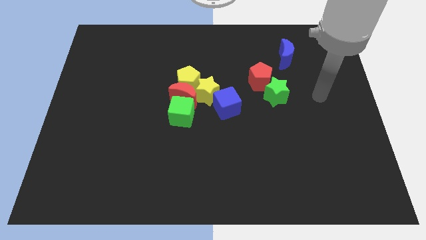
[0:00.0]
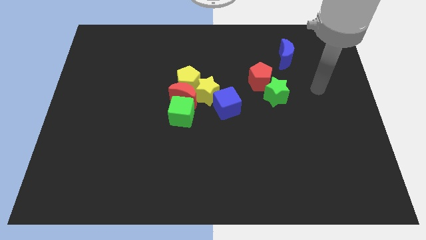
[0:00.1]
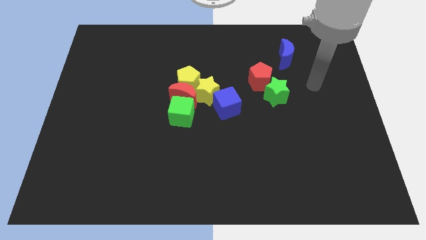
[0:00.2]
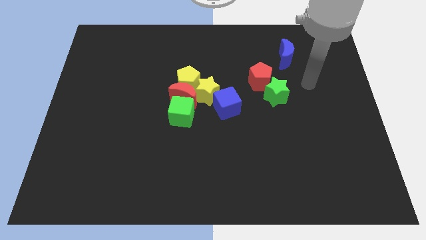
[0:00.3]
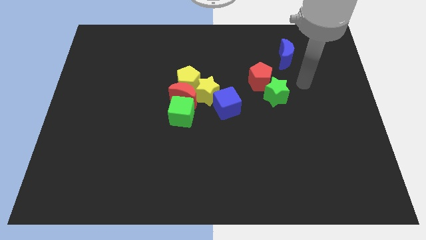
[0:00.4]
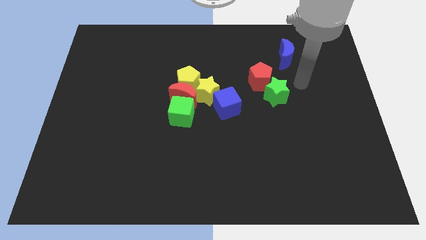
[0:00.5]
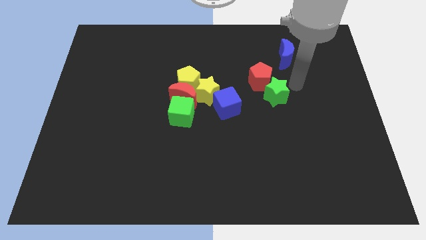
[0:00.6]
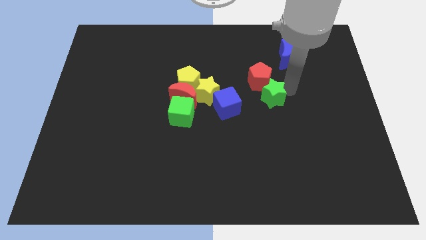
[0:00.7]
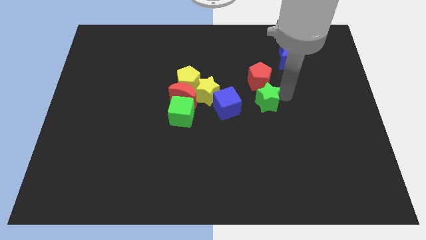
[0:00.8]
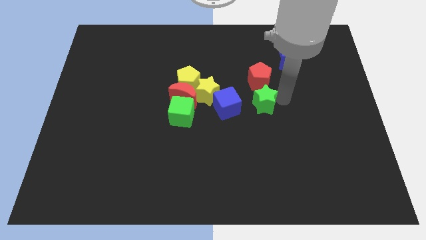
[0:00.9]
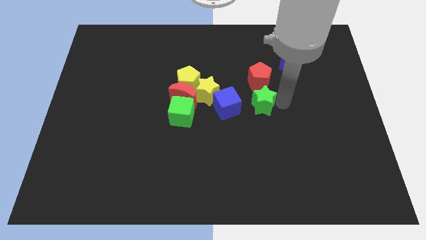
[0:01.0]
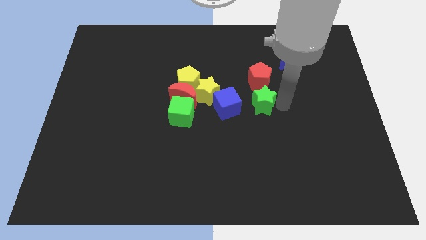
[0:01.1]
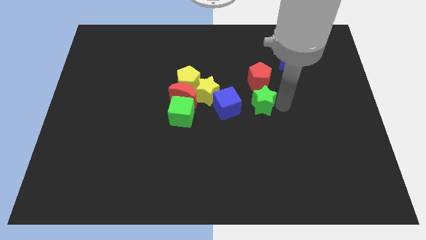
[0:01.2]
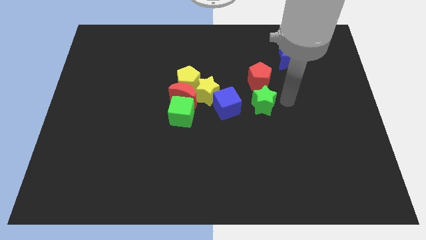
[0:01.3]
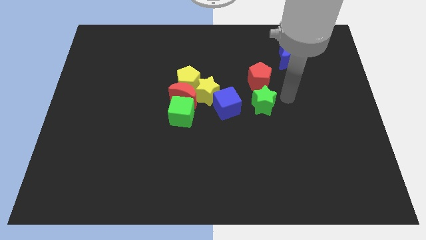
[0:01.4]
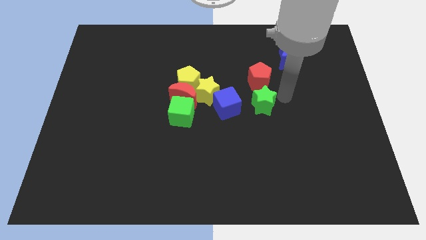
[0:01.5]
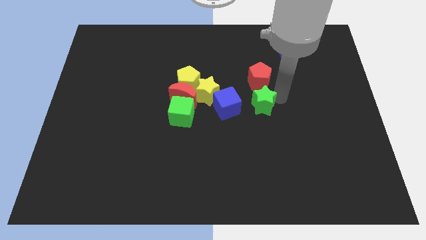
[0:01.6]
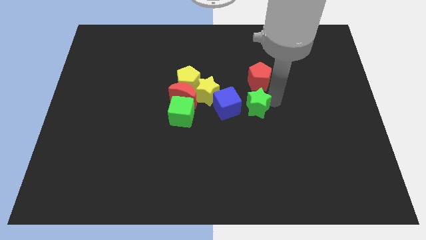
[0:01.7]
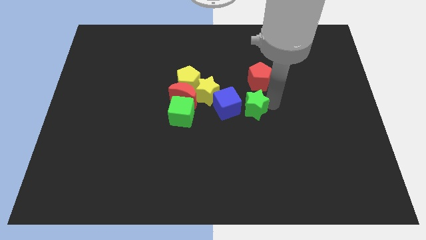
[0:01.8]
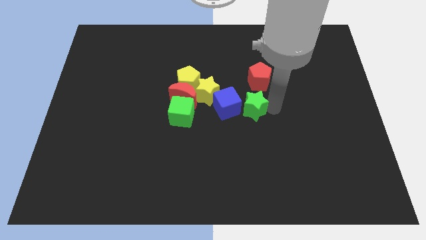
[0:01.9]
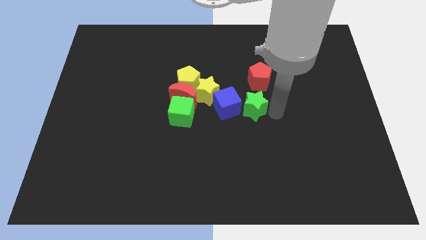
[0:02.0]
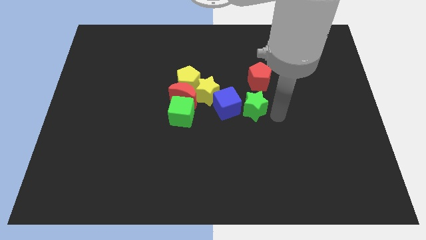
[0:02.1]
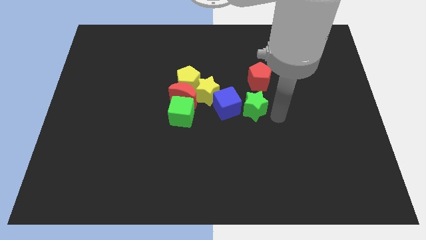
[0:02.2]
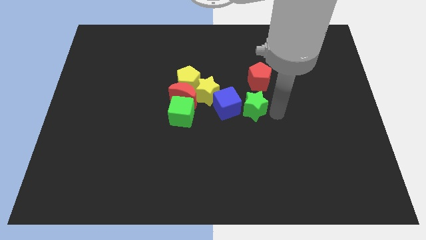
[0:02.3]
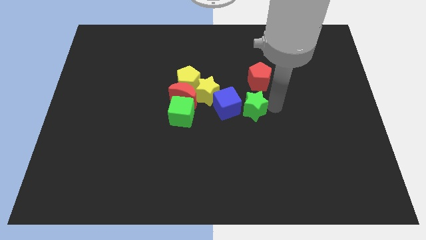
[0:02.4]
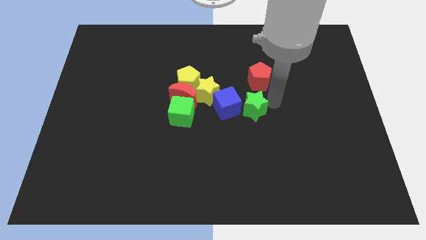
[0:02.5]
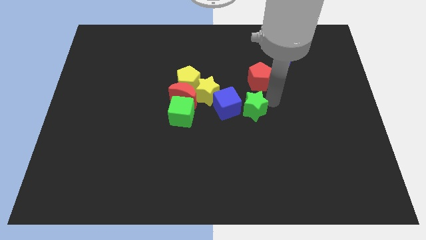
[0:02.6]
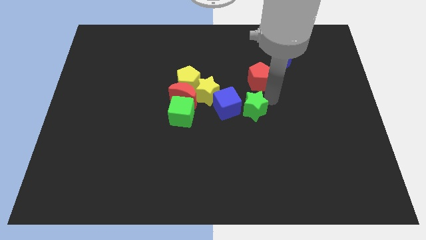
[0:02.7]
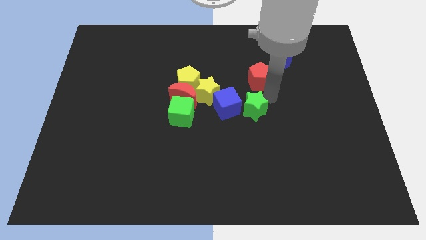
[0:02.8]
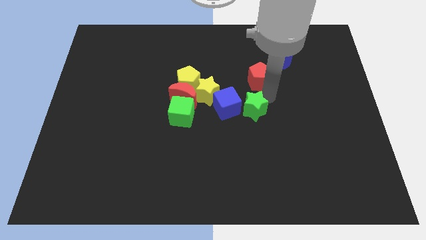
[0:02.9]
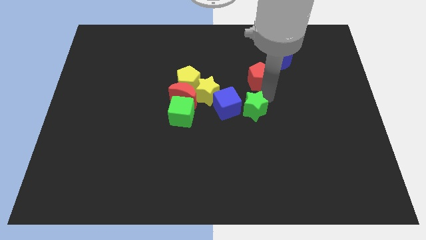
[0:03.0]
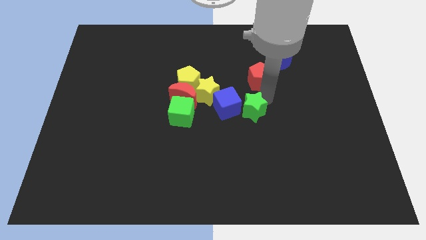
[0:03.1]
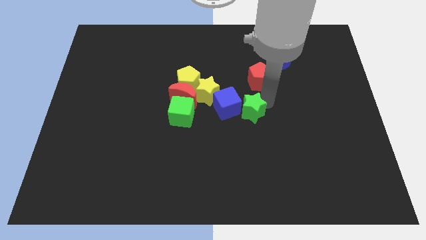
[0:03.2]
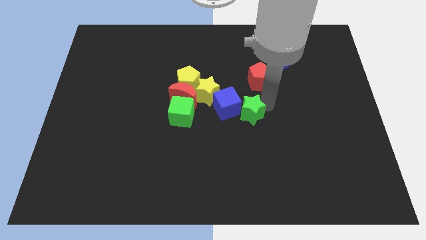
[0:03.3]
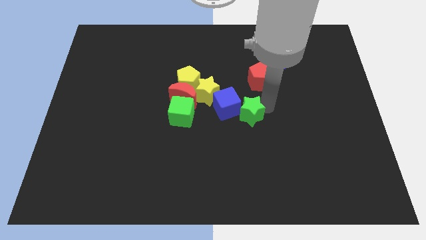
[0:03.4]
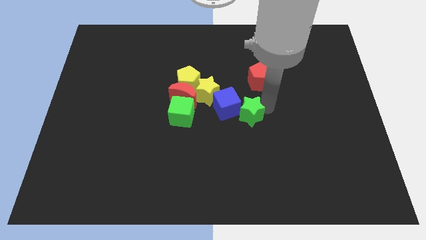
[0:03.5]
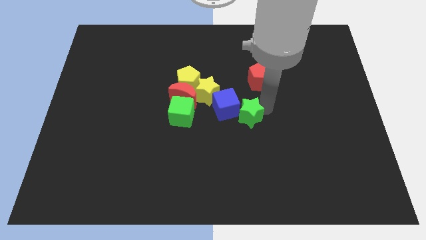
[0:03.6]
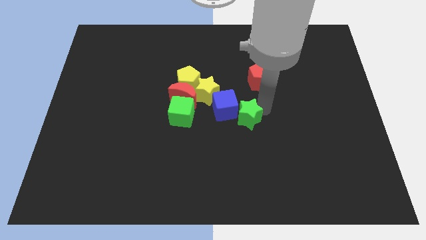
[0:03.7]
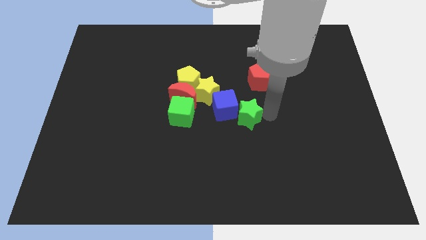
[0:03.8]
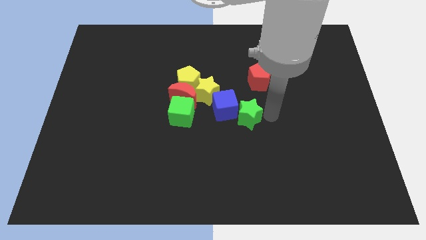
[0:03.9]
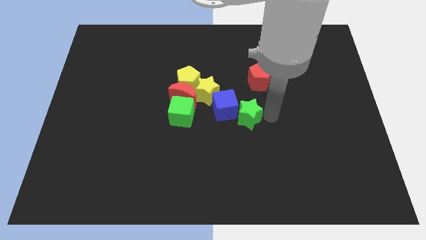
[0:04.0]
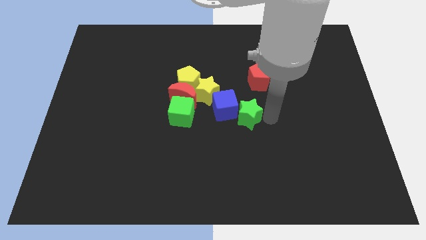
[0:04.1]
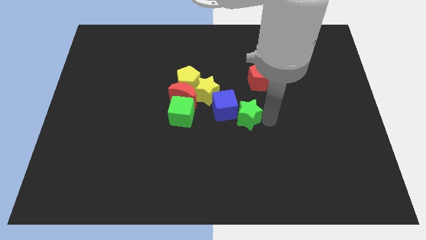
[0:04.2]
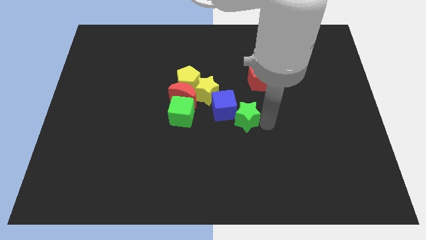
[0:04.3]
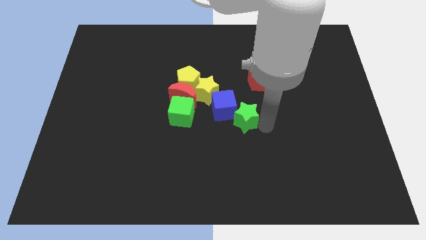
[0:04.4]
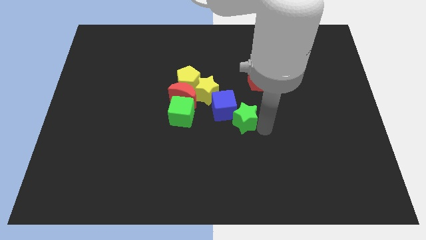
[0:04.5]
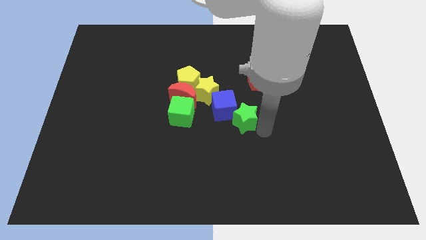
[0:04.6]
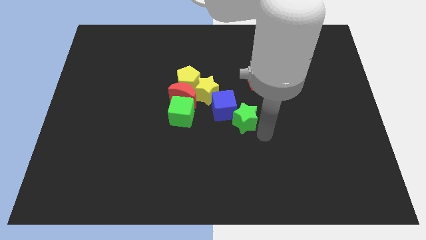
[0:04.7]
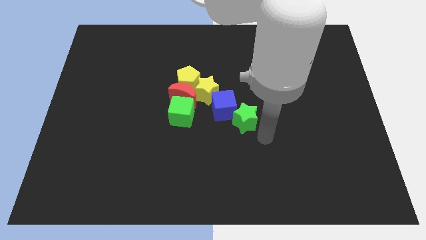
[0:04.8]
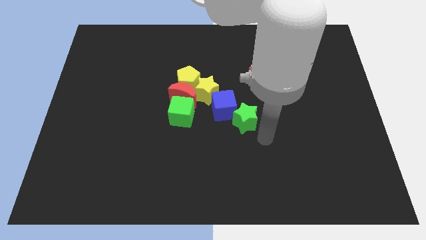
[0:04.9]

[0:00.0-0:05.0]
move the green star below to the blue cube

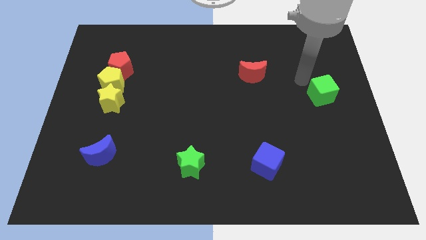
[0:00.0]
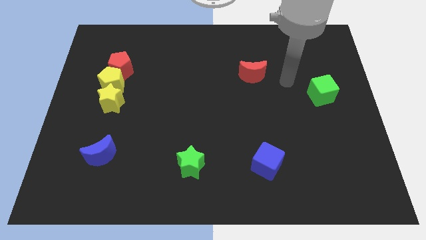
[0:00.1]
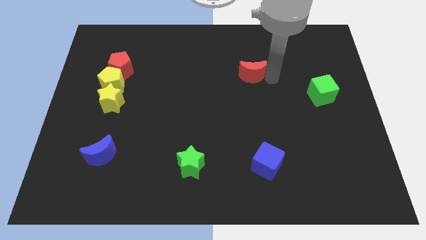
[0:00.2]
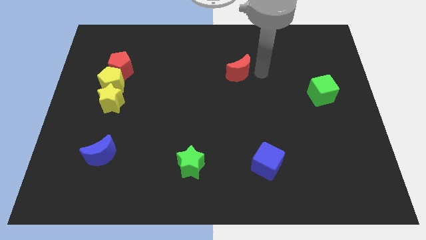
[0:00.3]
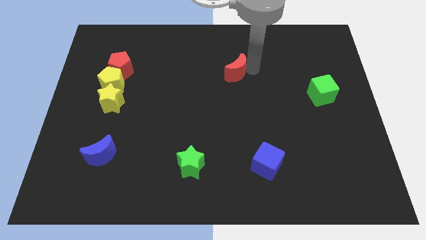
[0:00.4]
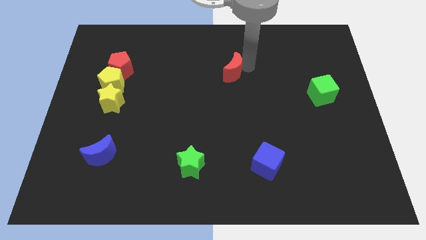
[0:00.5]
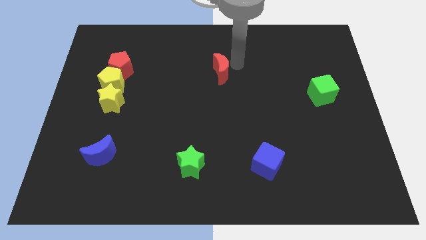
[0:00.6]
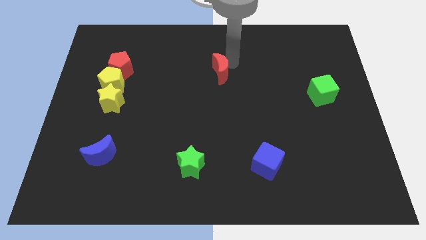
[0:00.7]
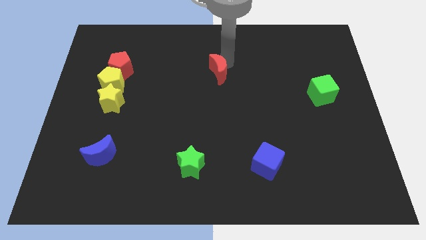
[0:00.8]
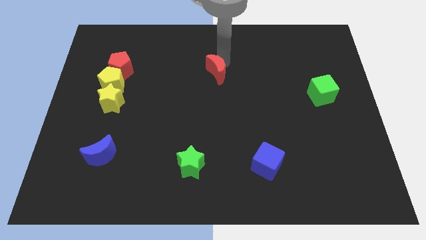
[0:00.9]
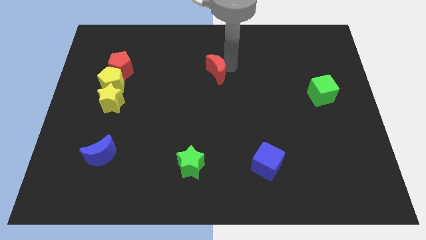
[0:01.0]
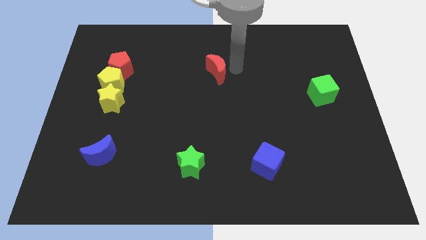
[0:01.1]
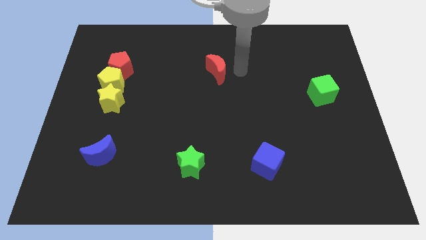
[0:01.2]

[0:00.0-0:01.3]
move the red crescent to the left side of the board

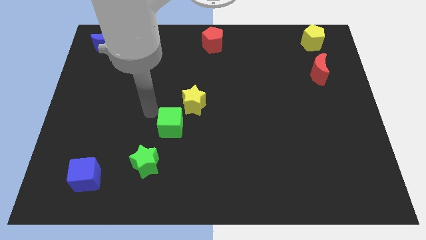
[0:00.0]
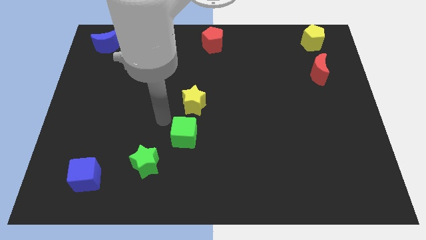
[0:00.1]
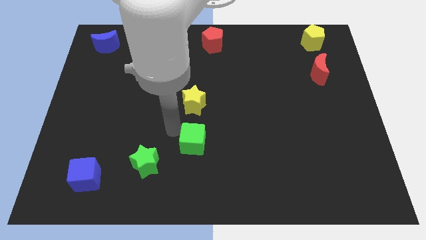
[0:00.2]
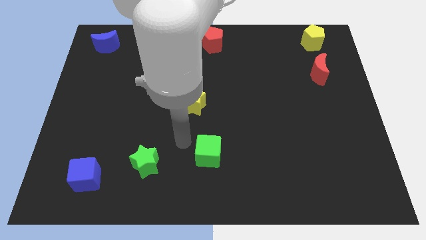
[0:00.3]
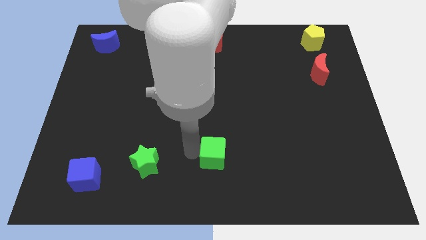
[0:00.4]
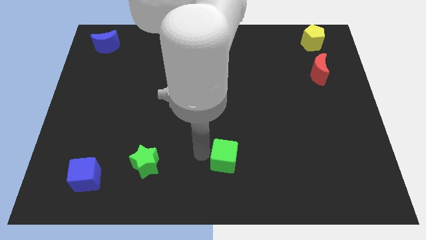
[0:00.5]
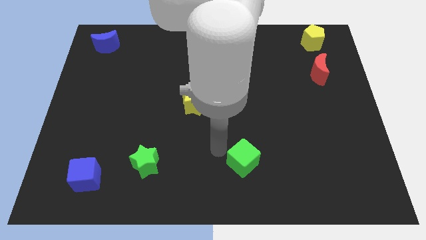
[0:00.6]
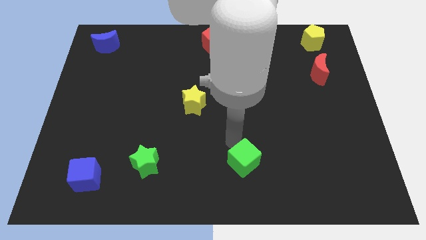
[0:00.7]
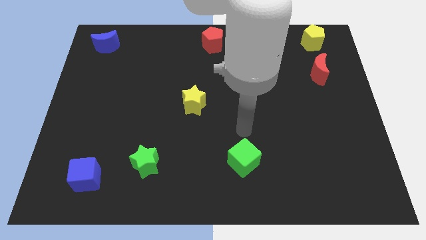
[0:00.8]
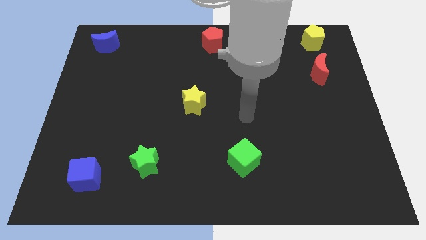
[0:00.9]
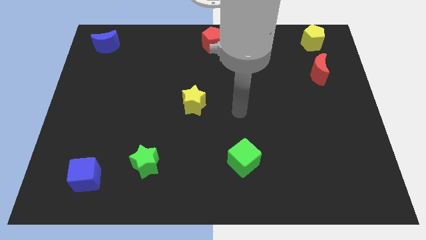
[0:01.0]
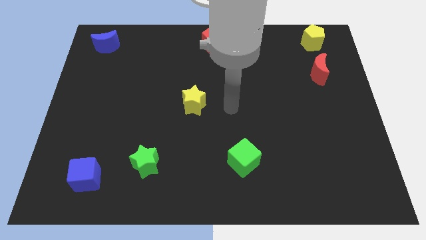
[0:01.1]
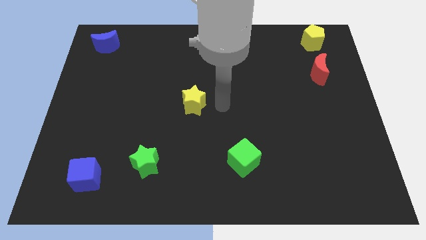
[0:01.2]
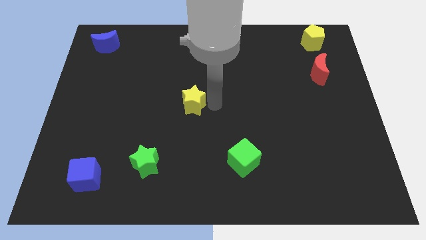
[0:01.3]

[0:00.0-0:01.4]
move the green cube to the left of the board

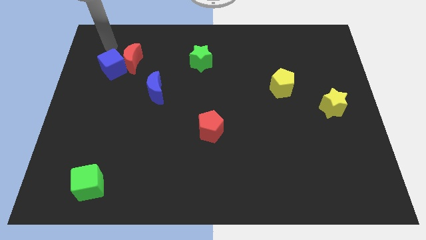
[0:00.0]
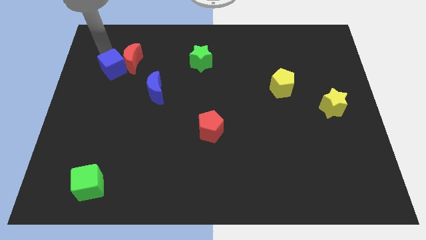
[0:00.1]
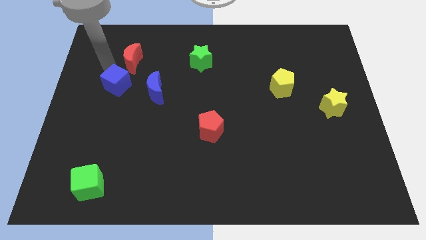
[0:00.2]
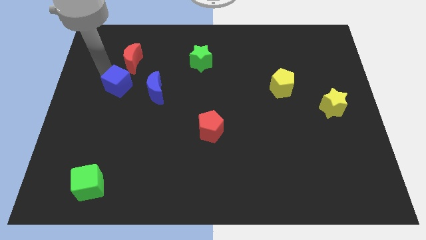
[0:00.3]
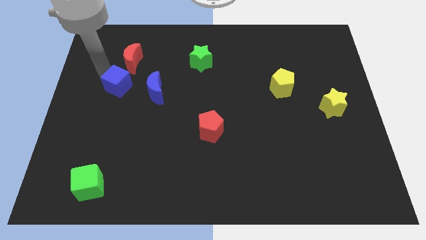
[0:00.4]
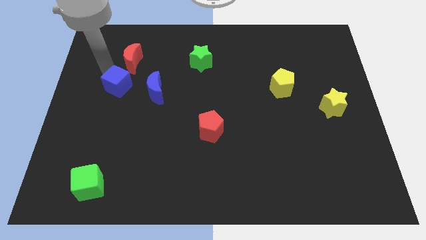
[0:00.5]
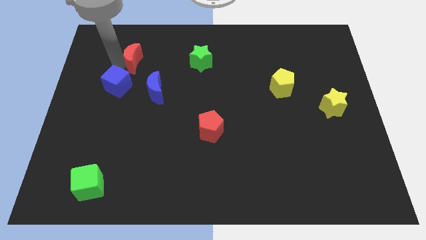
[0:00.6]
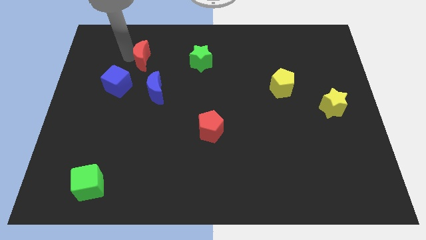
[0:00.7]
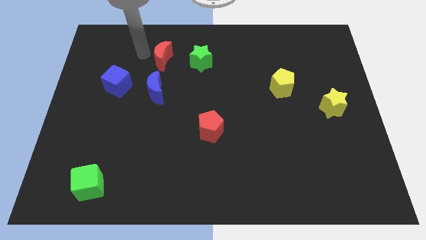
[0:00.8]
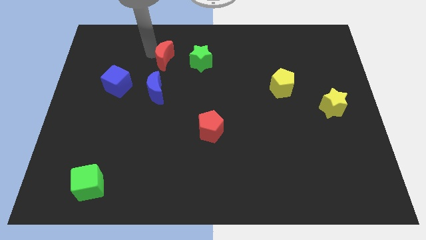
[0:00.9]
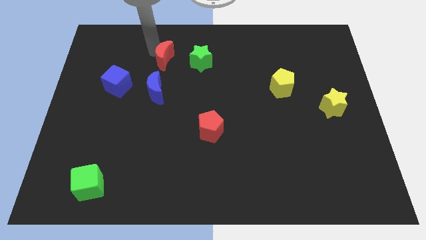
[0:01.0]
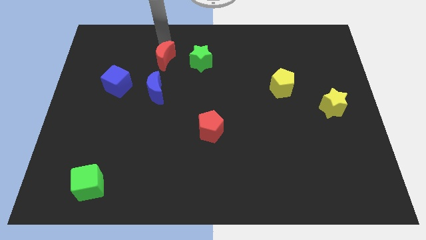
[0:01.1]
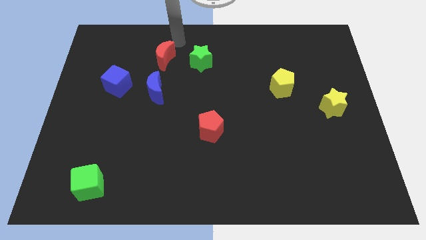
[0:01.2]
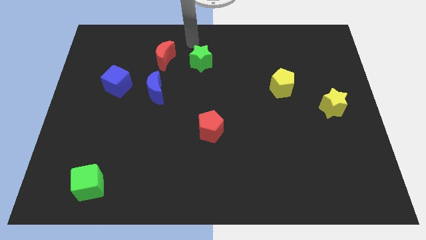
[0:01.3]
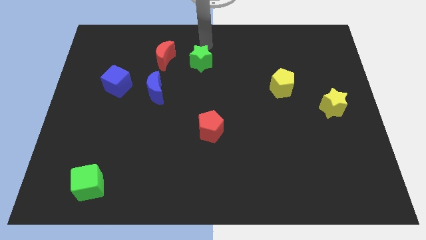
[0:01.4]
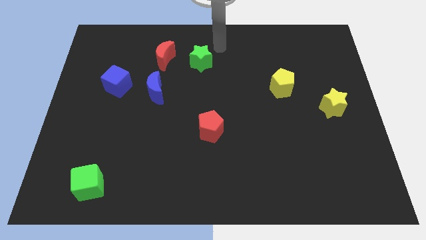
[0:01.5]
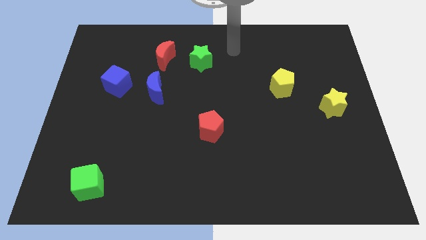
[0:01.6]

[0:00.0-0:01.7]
slide the blue cube and red crescent diagonal to each other
